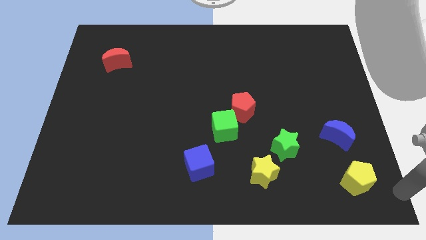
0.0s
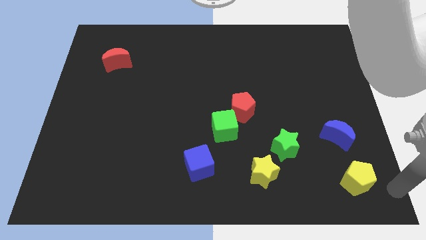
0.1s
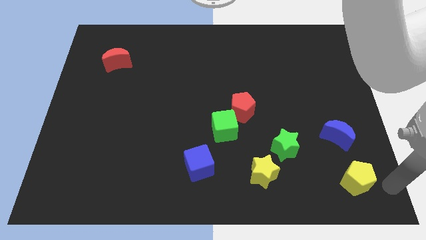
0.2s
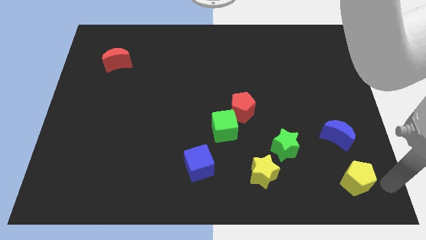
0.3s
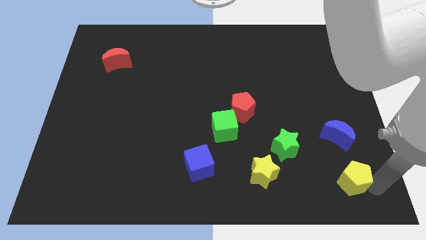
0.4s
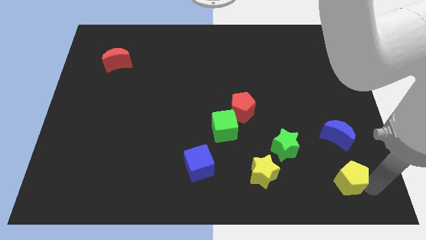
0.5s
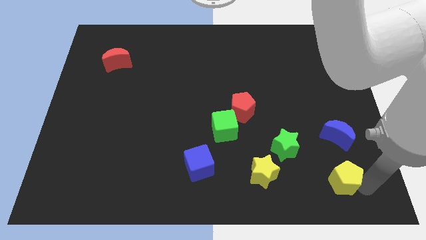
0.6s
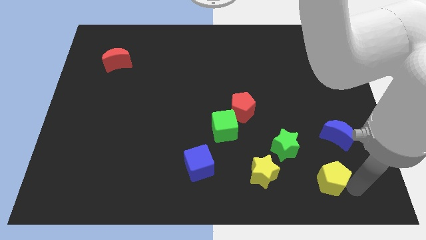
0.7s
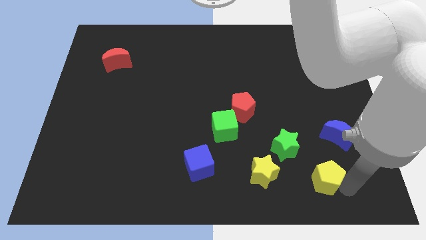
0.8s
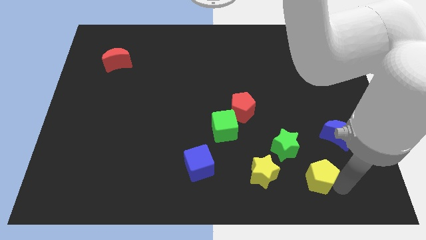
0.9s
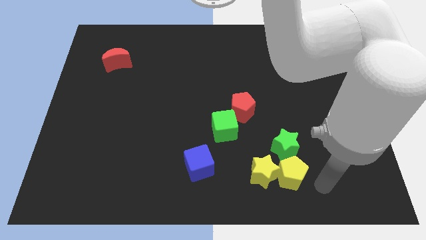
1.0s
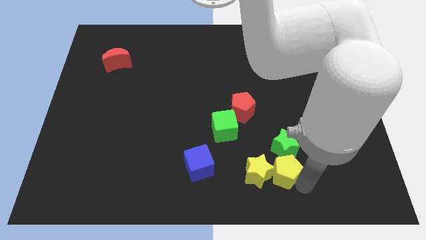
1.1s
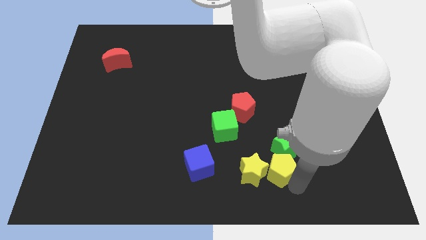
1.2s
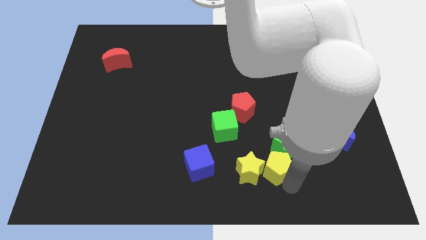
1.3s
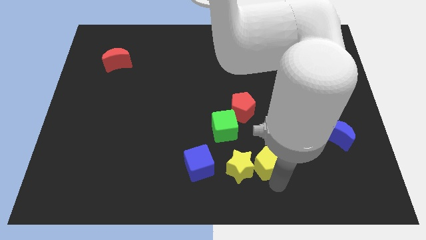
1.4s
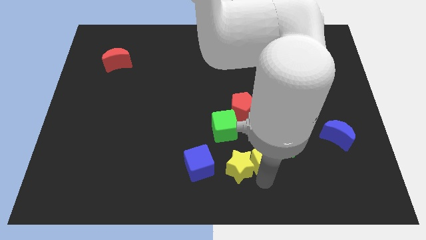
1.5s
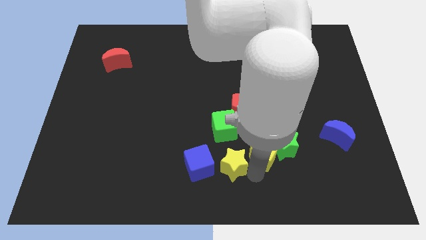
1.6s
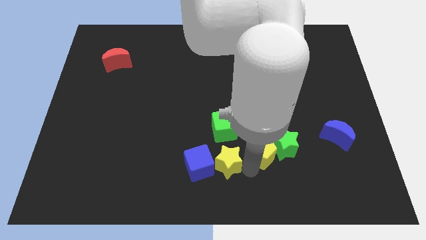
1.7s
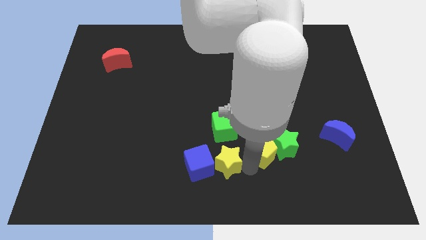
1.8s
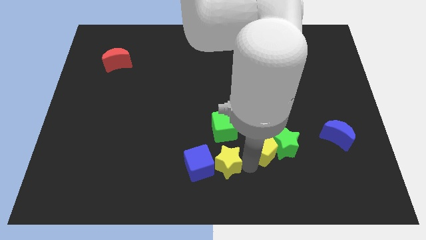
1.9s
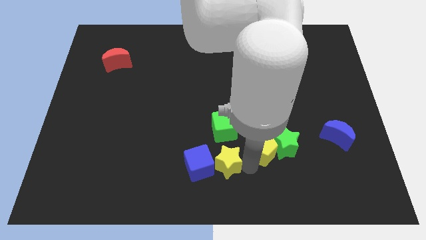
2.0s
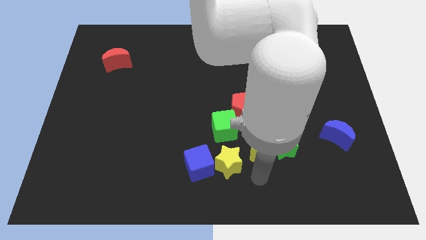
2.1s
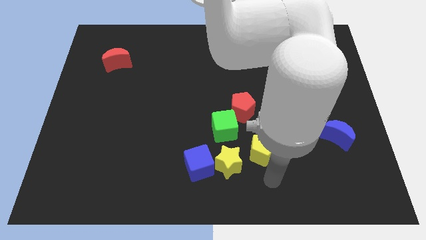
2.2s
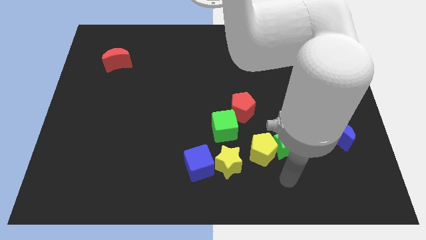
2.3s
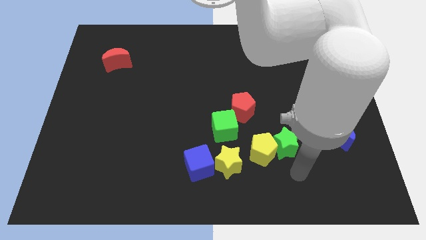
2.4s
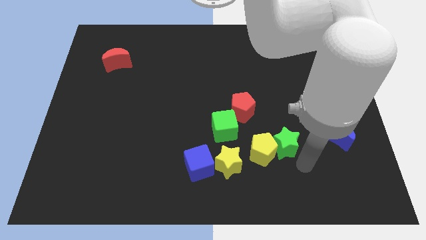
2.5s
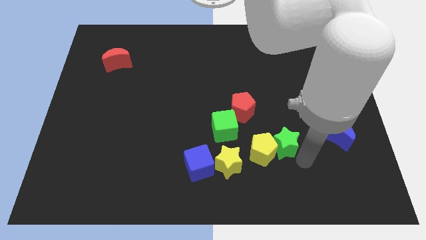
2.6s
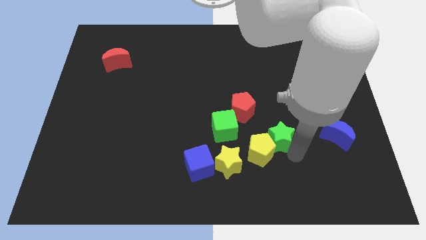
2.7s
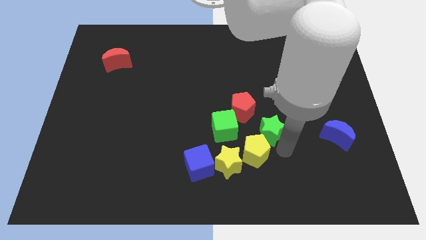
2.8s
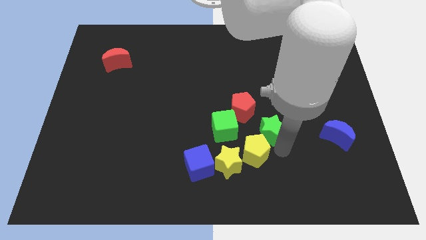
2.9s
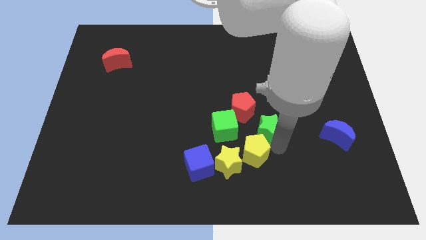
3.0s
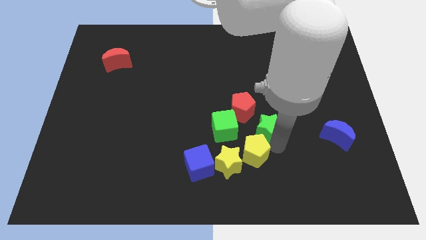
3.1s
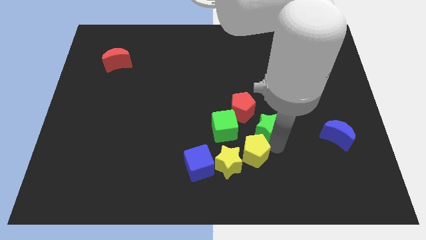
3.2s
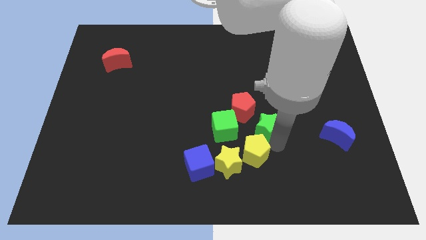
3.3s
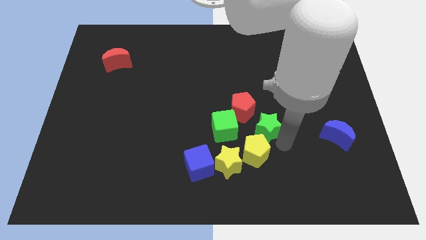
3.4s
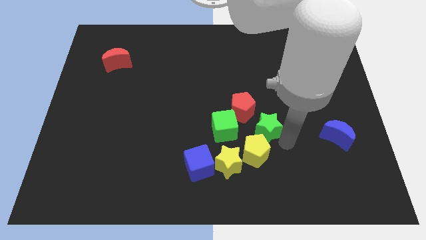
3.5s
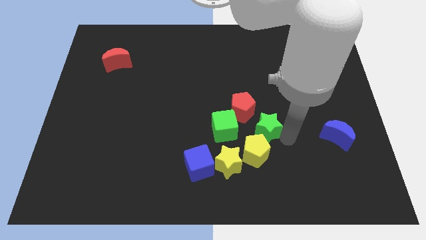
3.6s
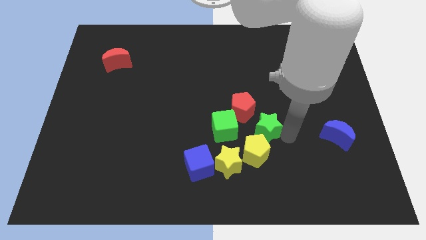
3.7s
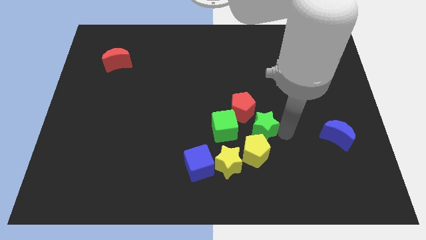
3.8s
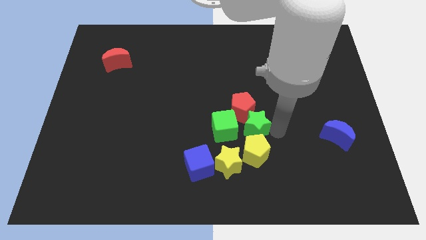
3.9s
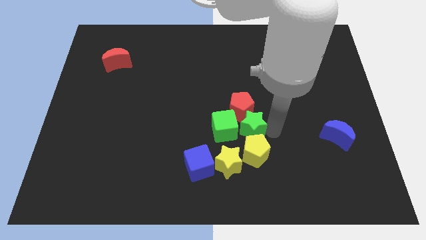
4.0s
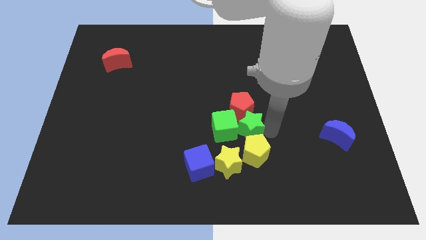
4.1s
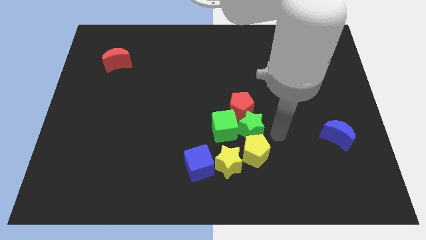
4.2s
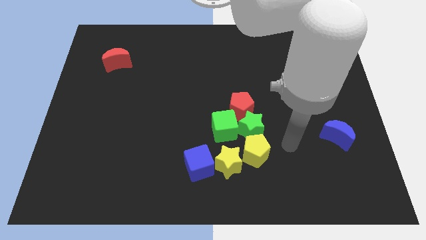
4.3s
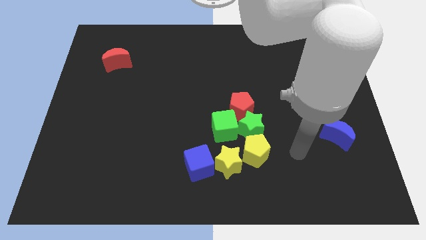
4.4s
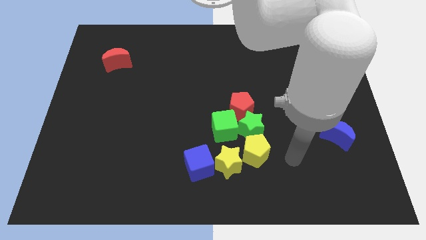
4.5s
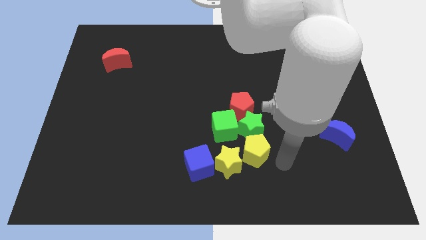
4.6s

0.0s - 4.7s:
push a yellow pentagon into the group of blocks

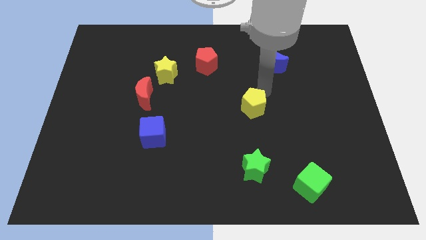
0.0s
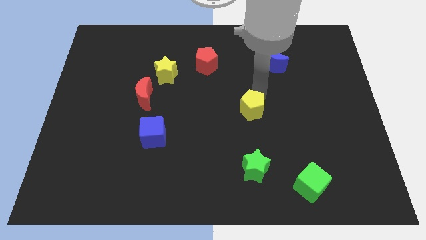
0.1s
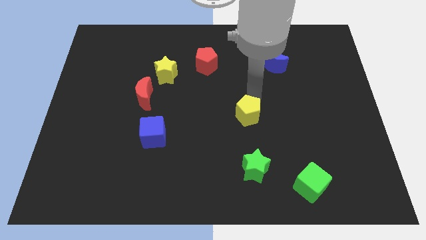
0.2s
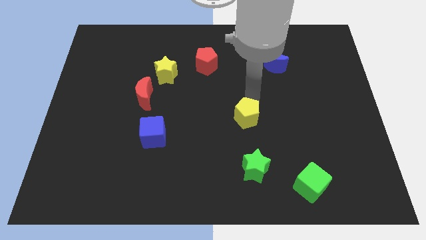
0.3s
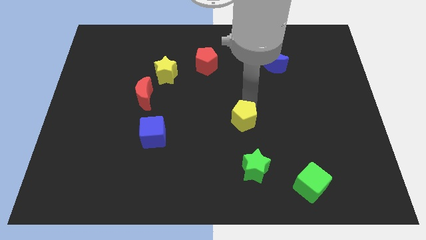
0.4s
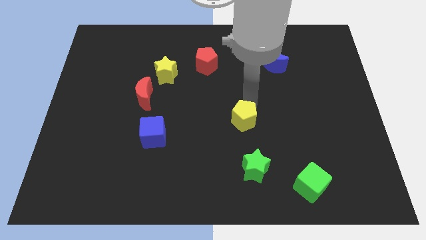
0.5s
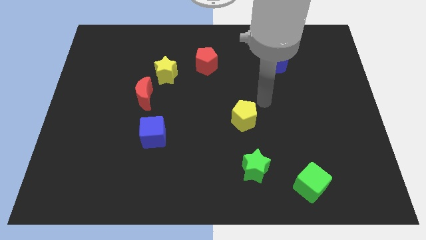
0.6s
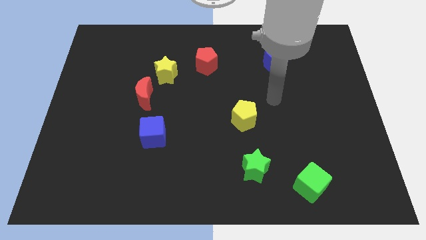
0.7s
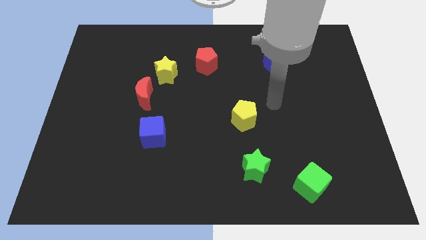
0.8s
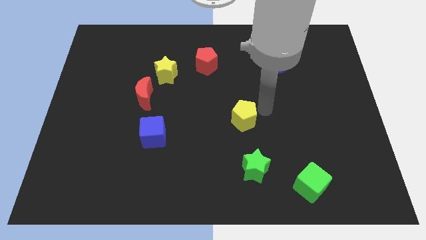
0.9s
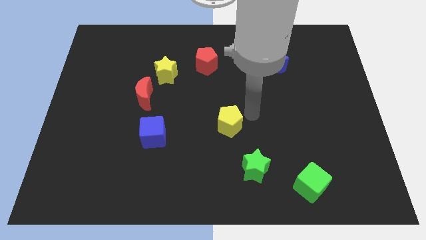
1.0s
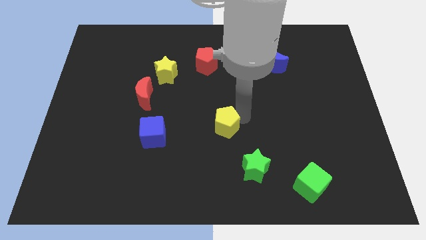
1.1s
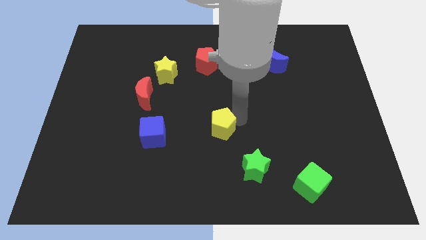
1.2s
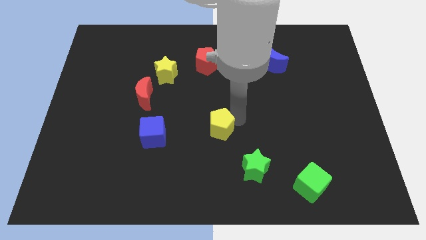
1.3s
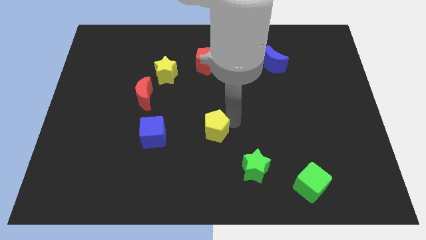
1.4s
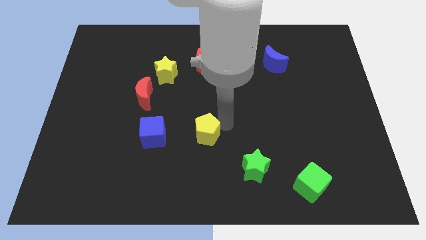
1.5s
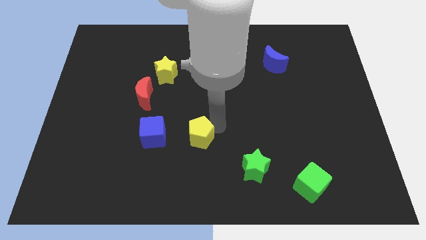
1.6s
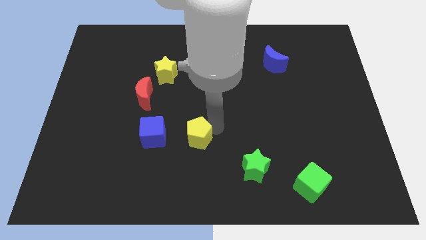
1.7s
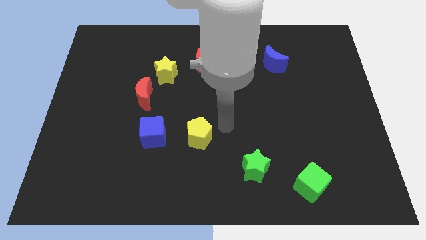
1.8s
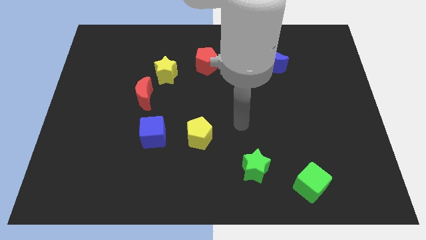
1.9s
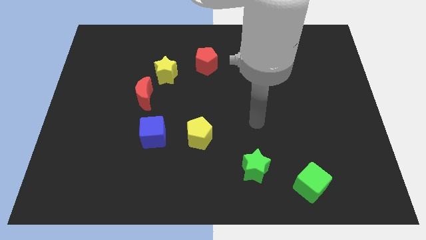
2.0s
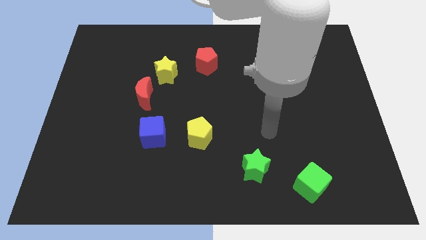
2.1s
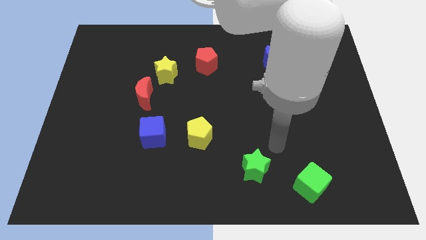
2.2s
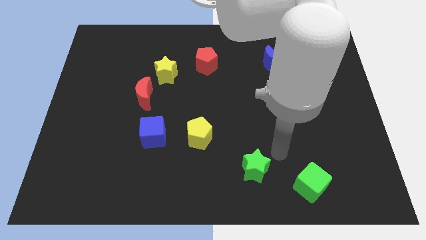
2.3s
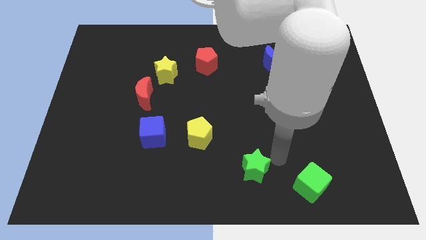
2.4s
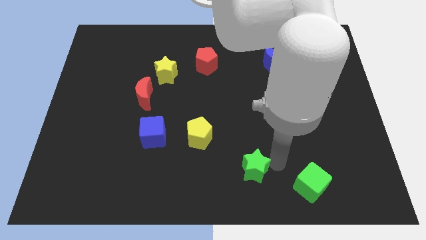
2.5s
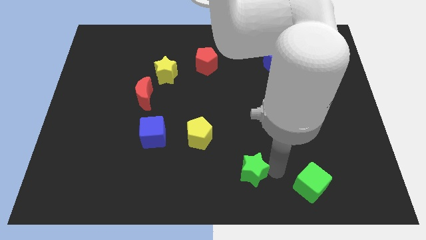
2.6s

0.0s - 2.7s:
slide the yellow pentagon right to the blue cube

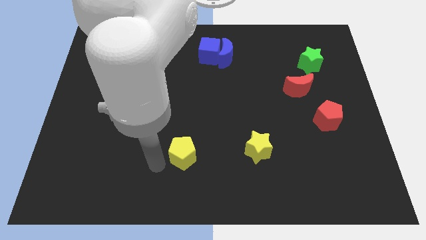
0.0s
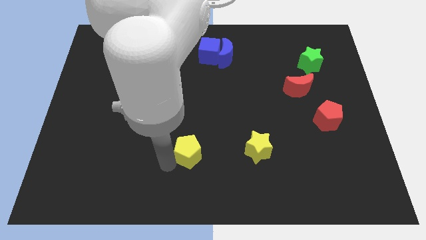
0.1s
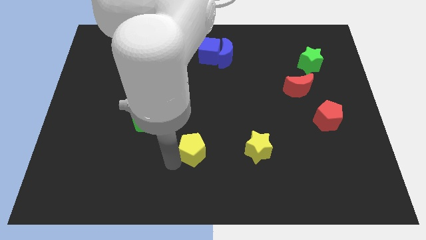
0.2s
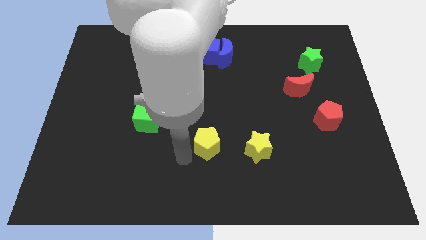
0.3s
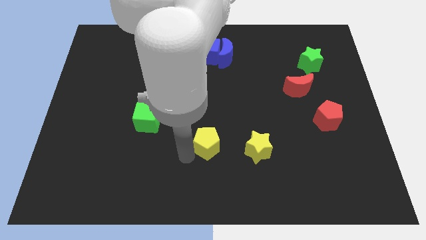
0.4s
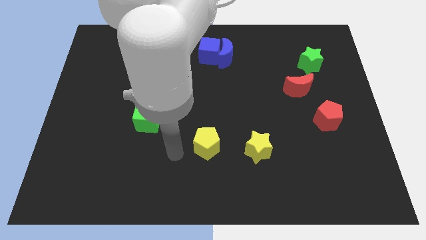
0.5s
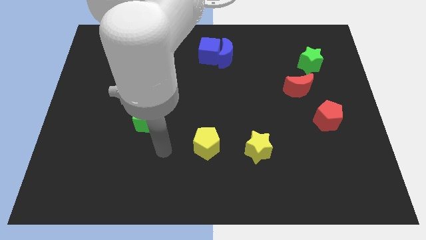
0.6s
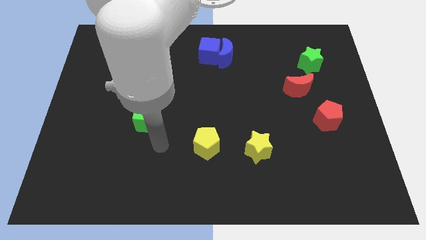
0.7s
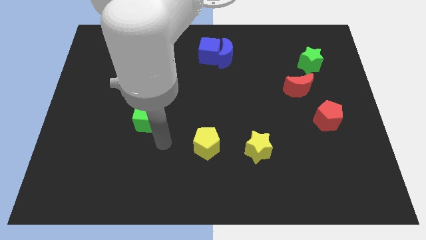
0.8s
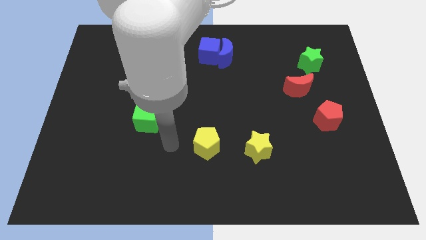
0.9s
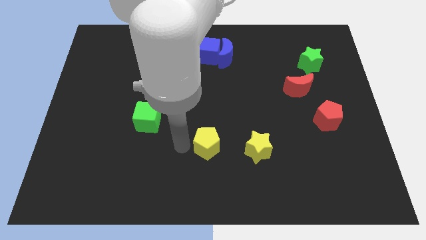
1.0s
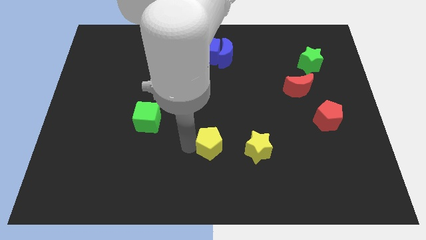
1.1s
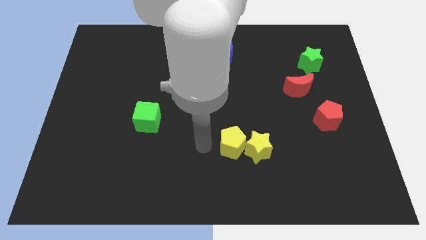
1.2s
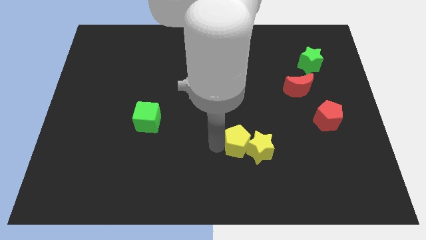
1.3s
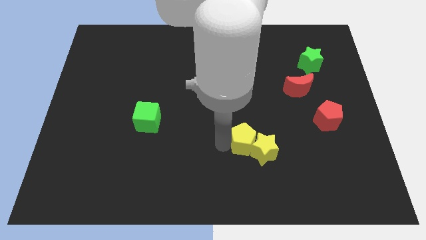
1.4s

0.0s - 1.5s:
push the yellow pentagon into the yellow star from the left

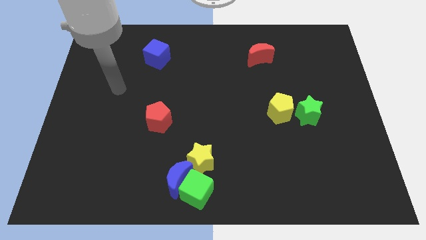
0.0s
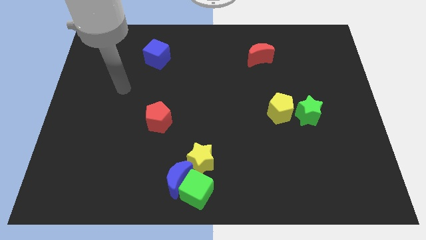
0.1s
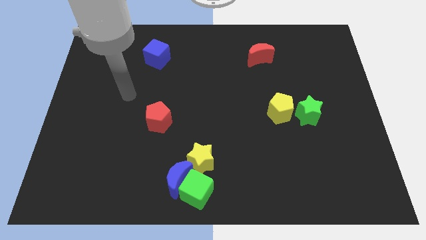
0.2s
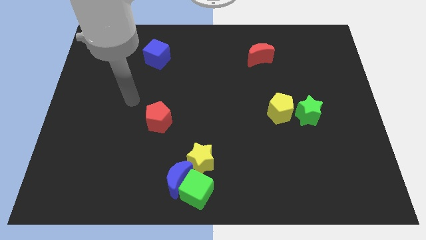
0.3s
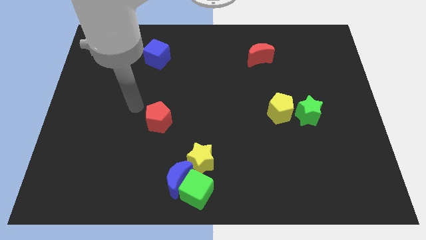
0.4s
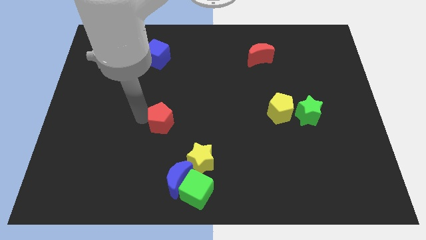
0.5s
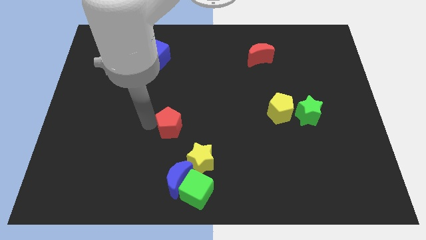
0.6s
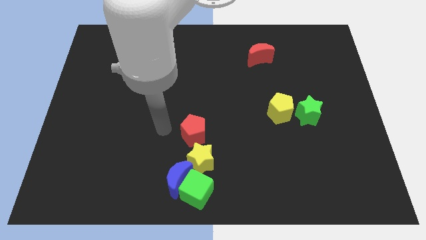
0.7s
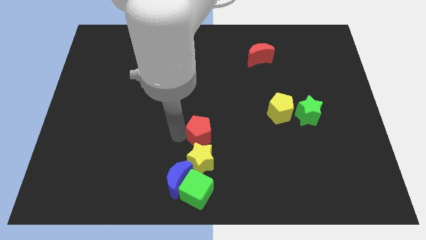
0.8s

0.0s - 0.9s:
move the red pentagon above the yellow star
